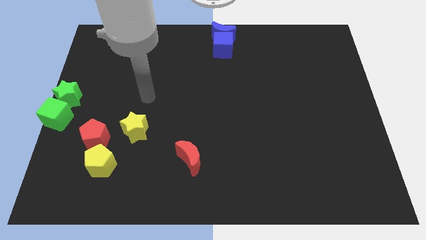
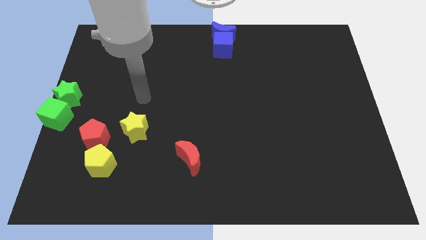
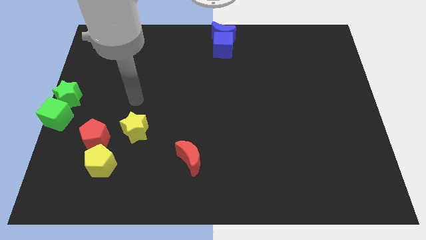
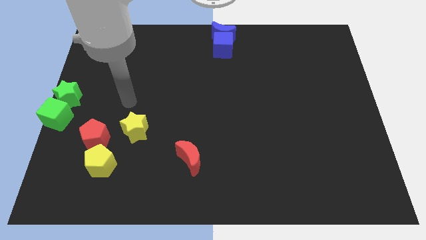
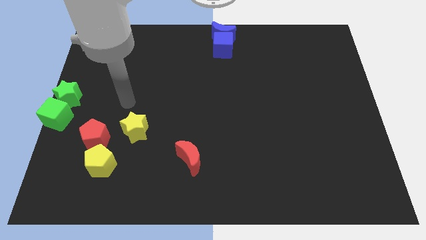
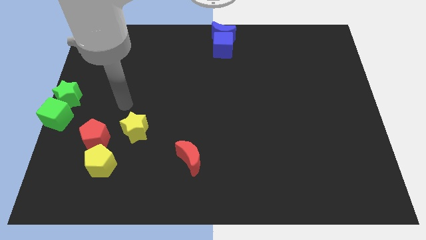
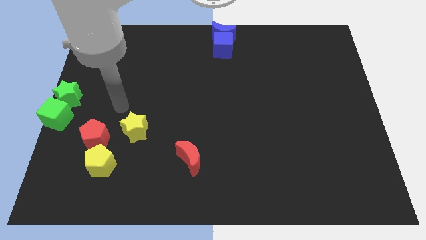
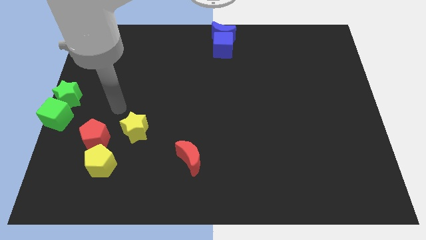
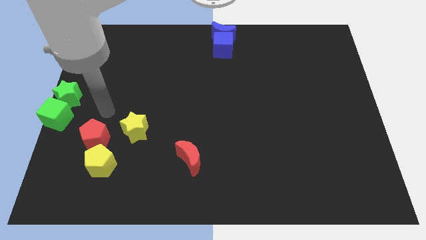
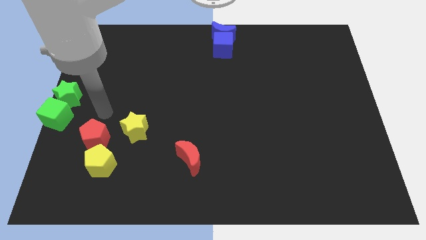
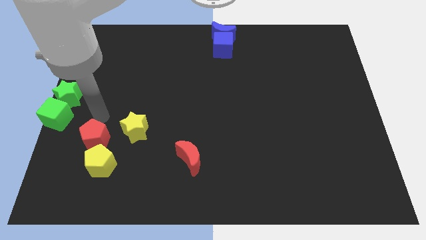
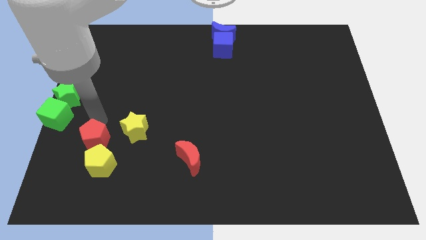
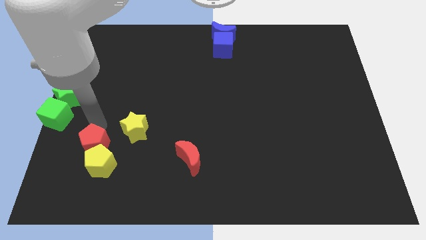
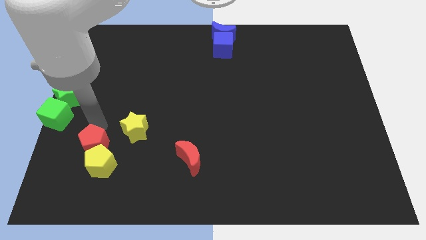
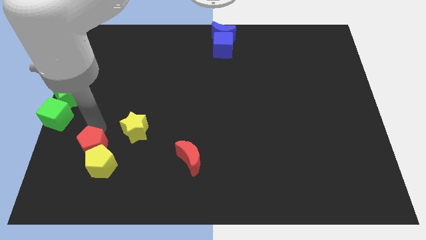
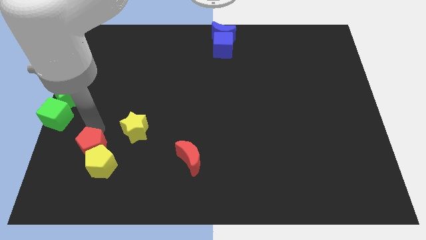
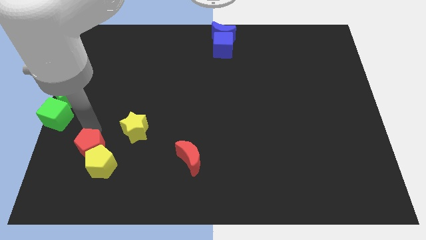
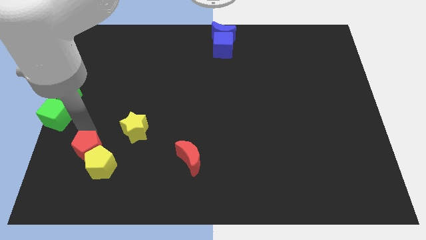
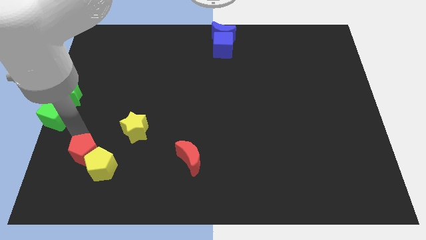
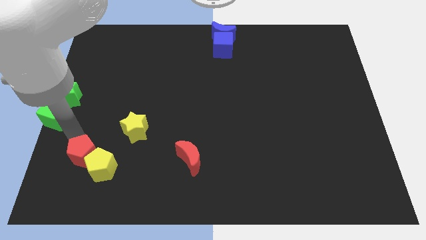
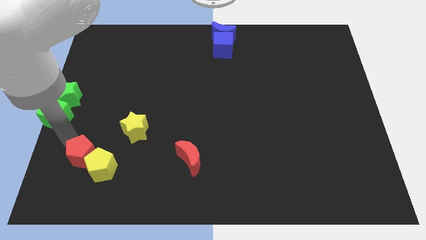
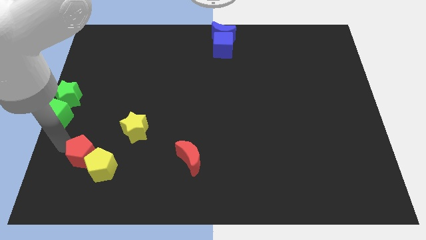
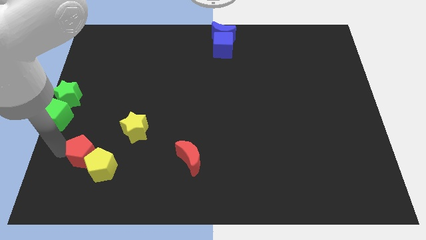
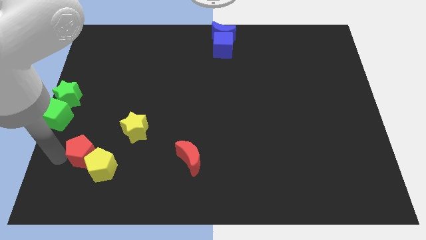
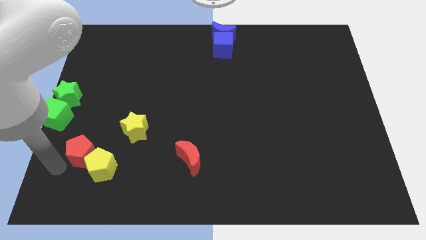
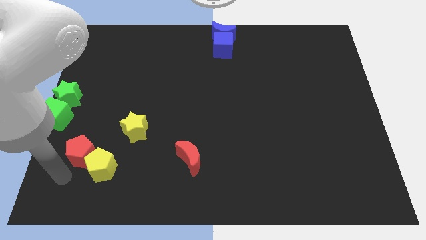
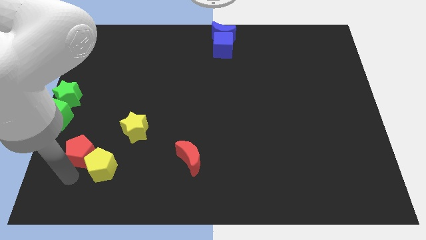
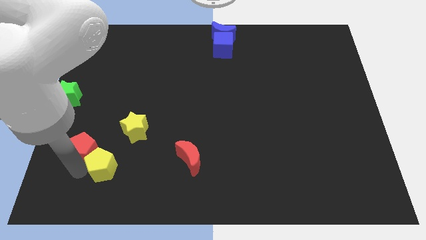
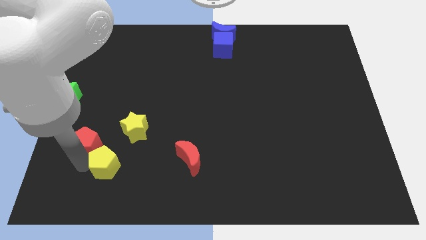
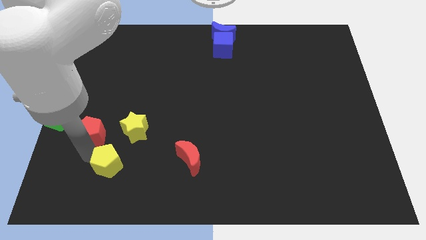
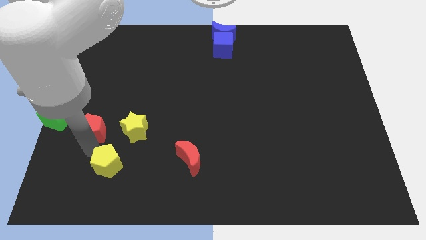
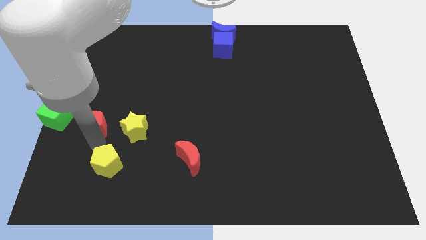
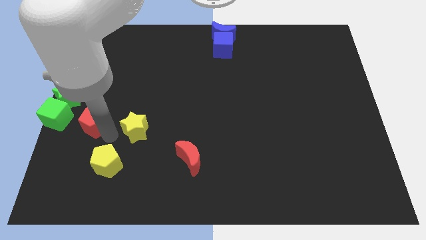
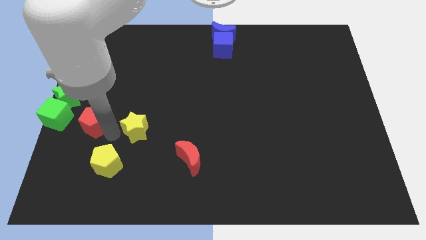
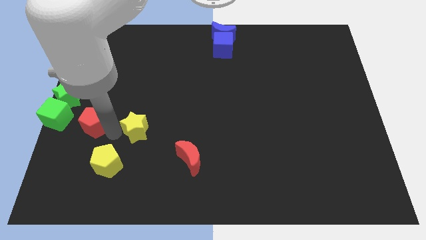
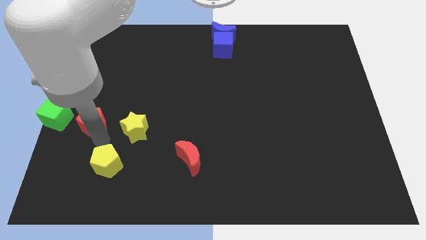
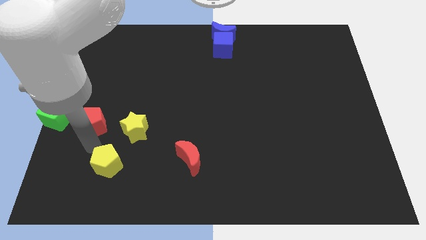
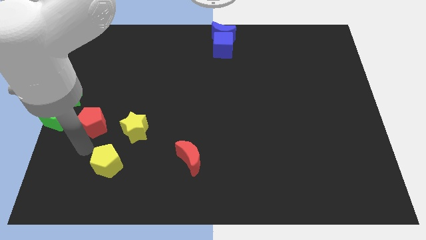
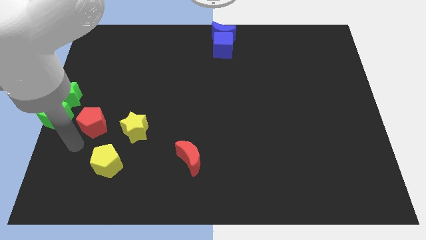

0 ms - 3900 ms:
separate the red pentagon from the yellow pentagon

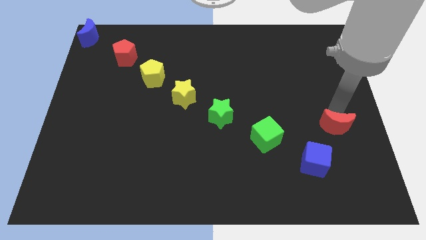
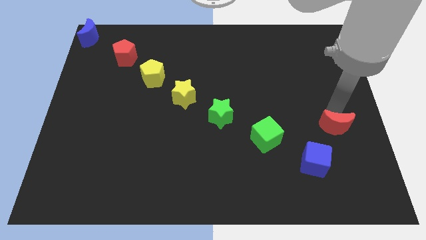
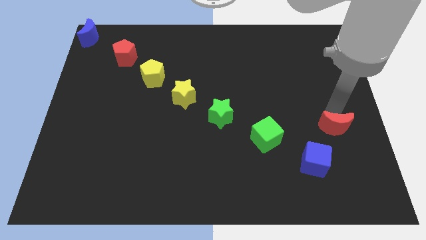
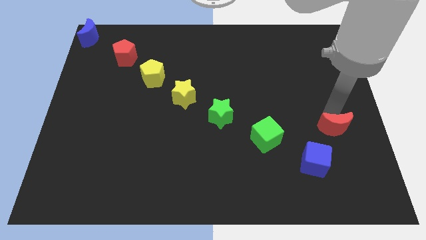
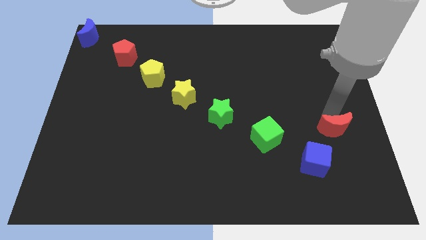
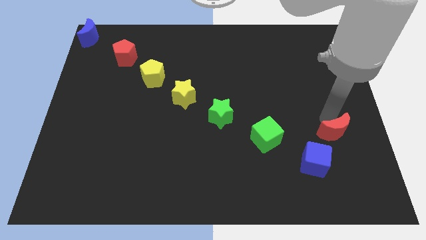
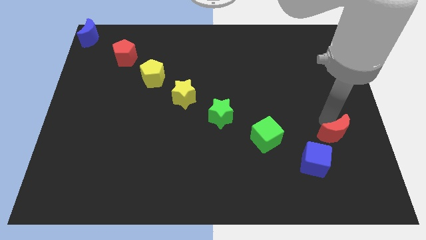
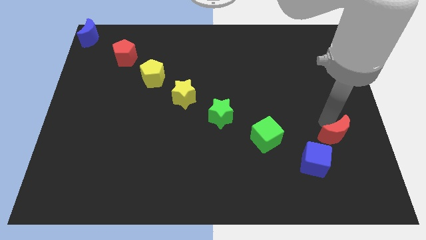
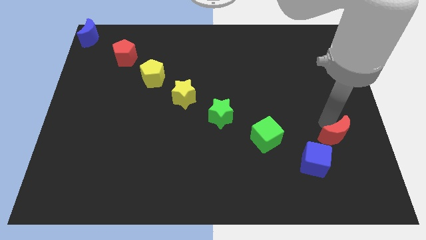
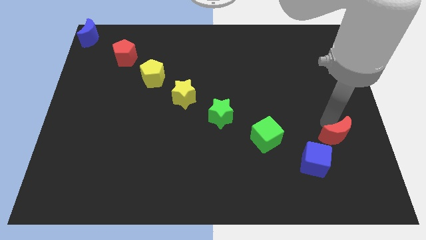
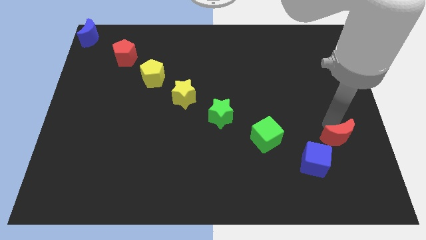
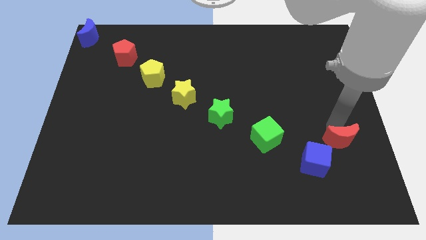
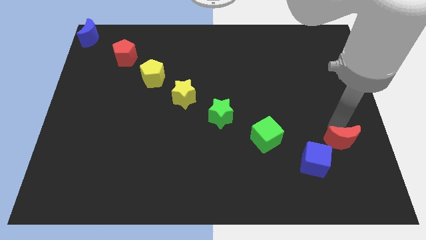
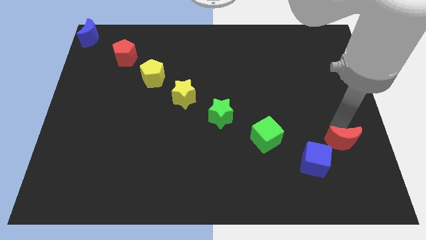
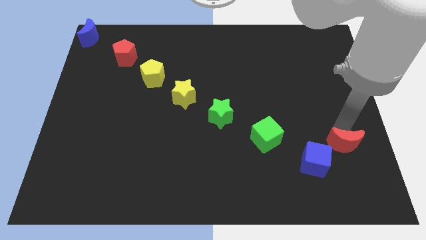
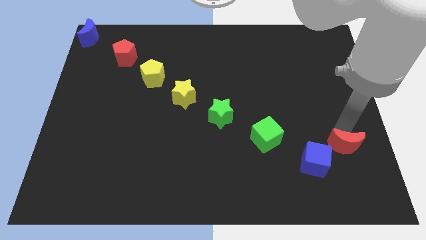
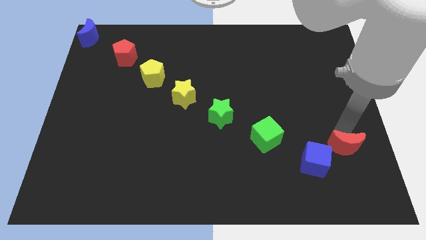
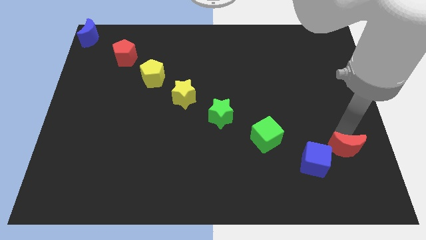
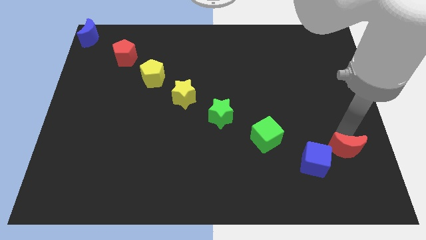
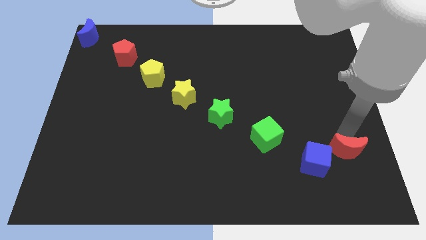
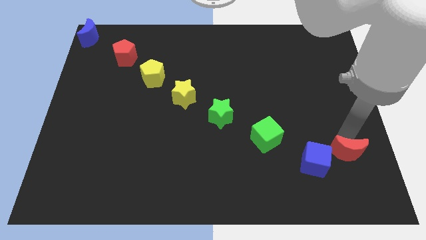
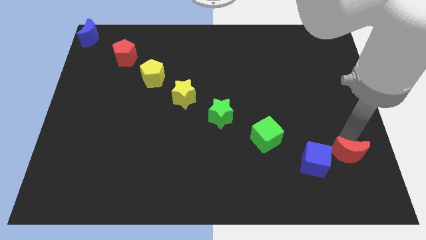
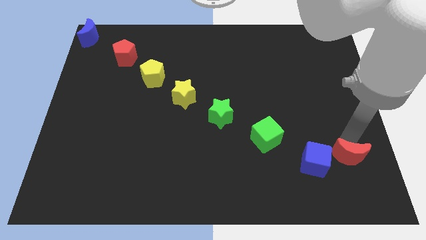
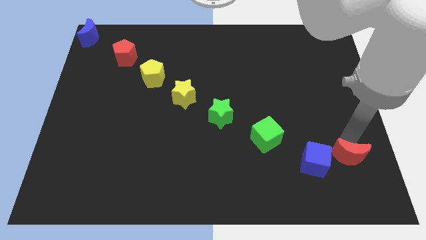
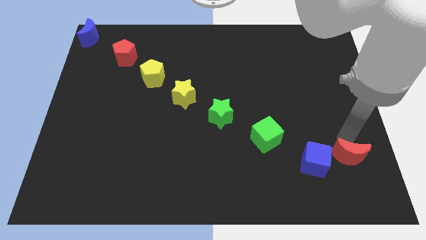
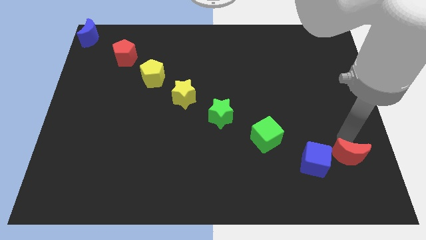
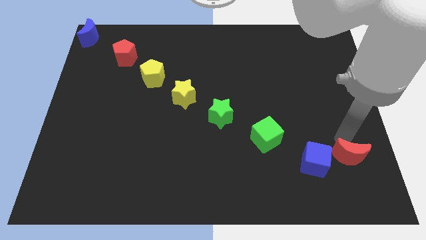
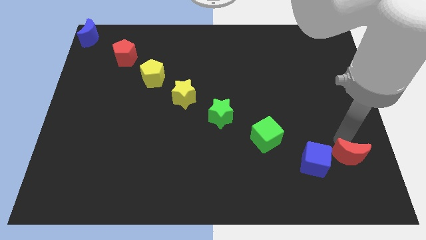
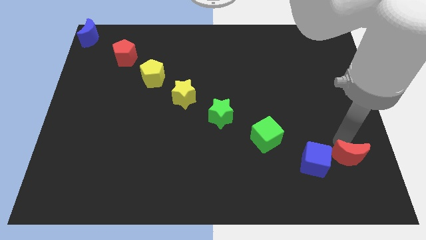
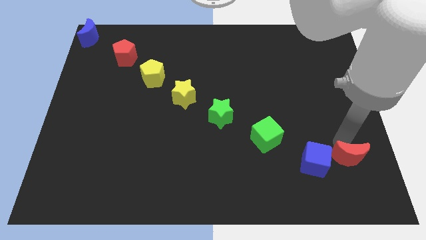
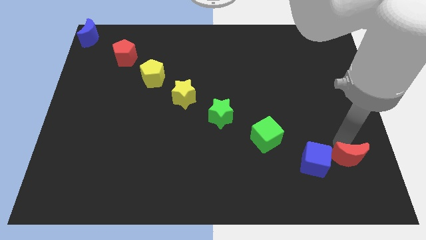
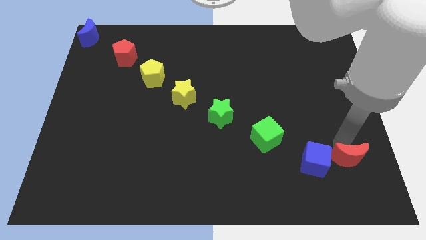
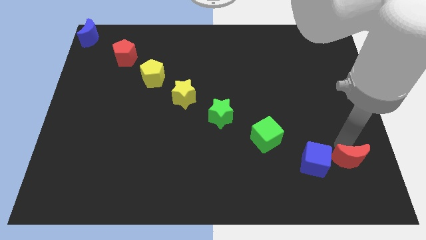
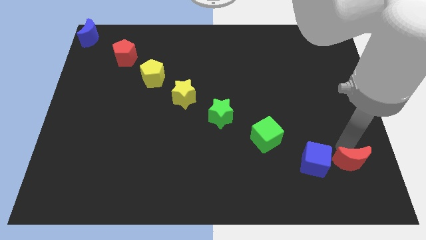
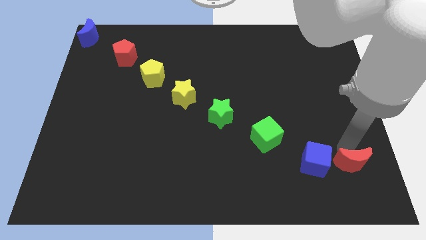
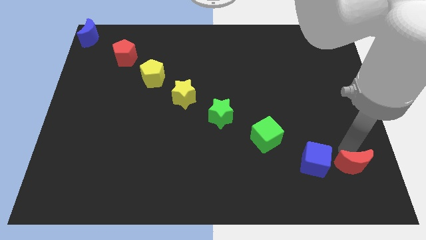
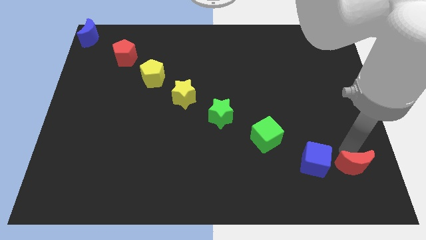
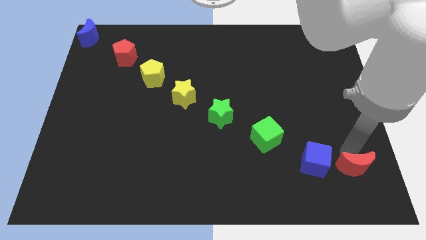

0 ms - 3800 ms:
place the red moon below the blue cube

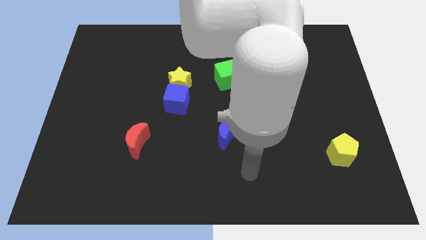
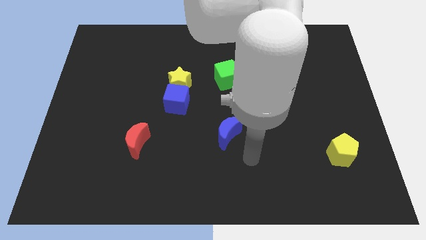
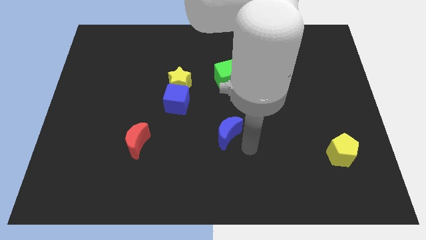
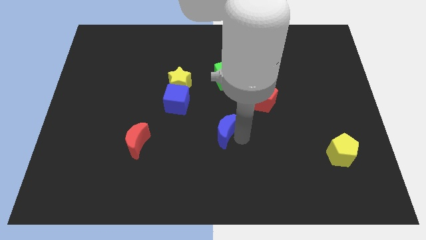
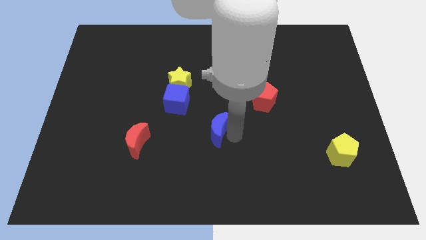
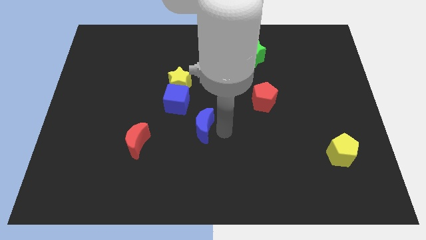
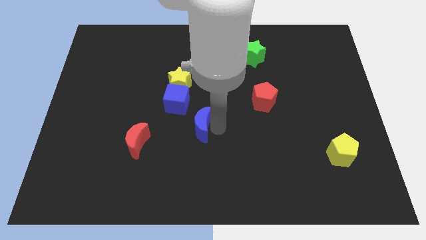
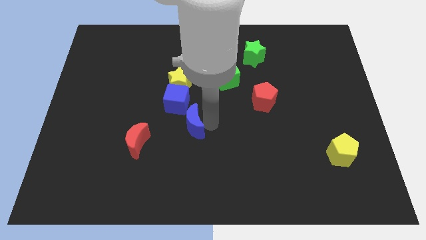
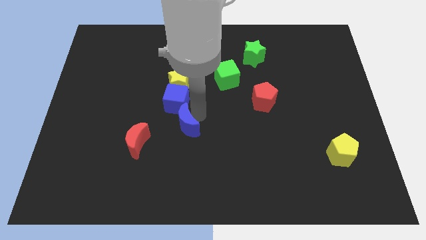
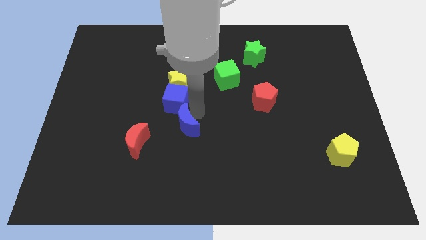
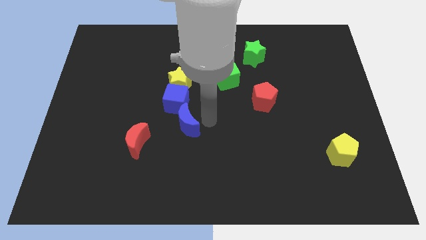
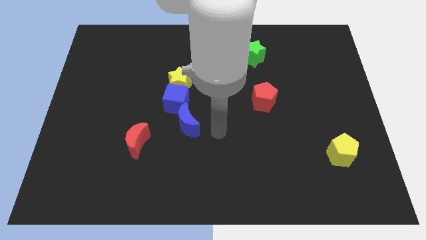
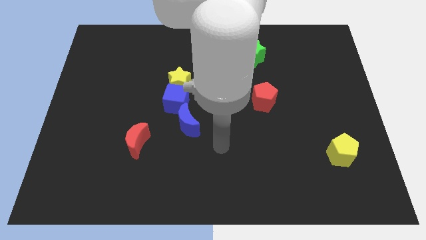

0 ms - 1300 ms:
push the blue crescent into the blue cube
